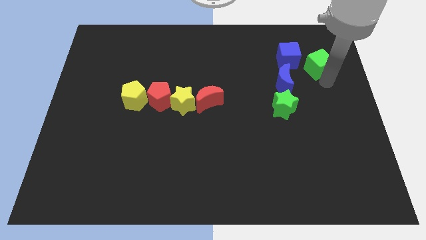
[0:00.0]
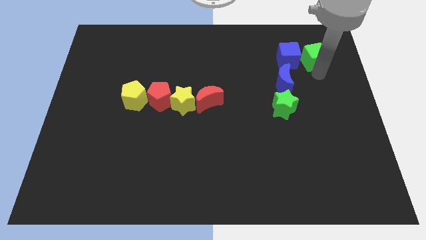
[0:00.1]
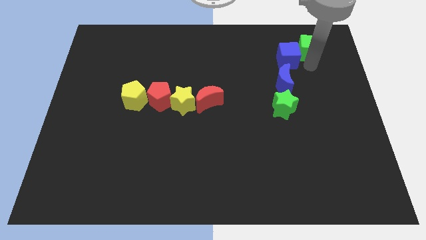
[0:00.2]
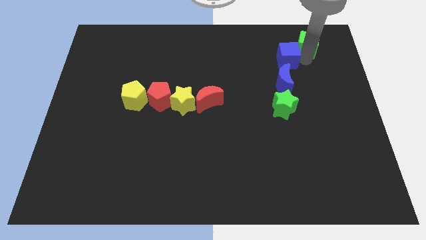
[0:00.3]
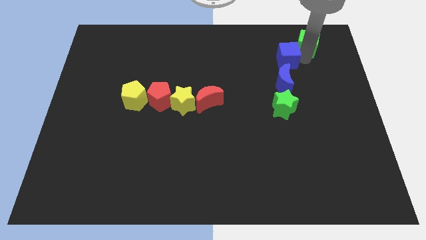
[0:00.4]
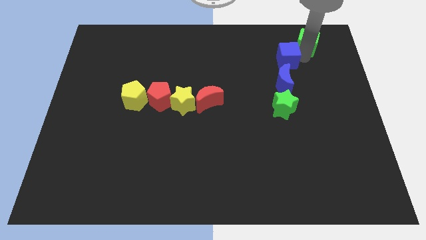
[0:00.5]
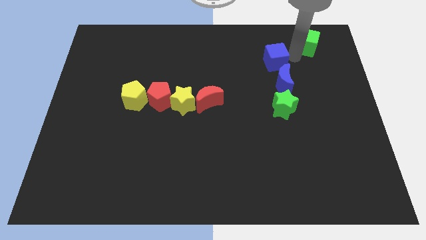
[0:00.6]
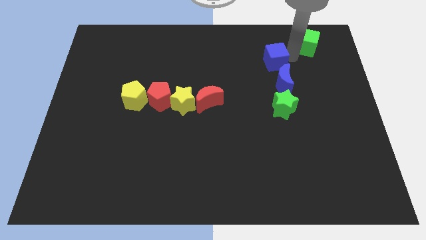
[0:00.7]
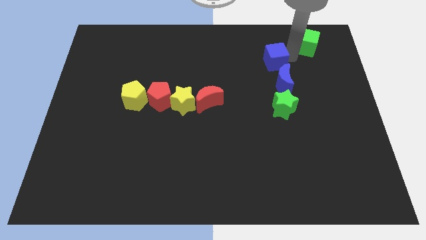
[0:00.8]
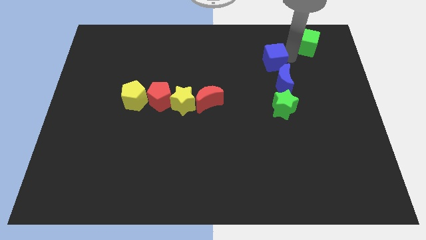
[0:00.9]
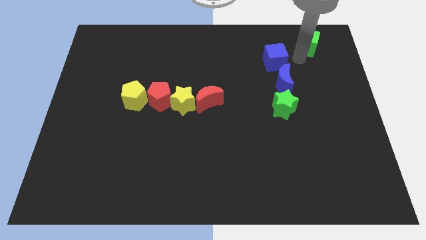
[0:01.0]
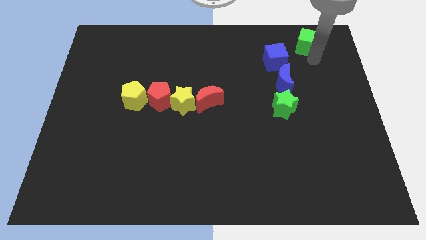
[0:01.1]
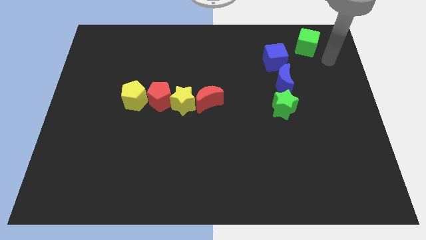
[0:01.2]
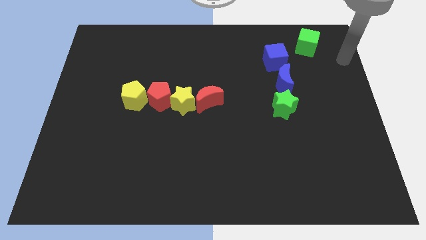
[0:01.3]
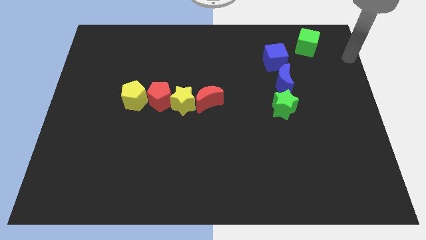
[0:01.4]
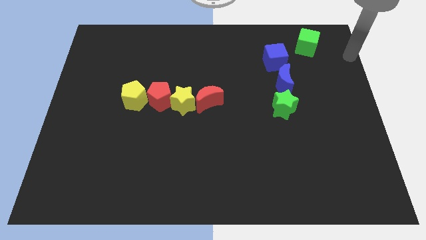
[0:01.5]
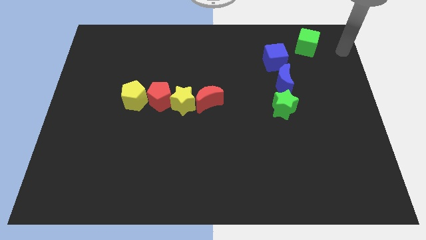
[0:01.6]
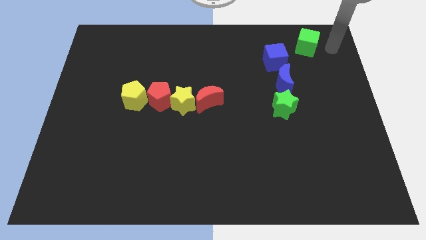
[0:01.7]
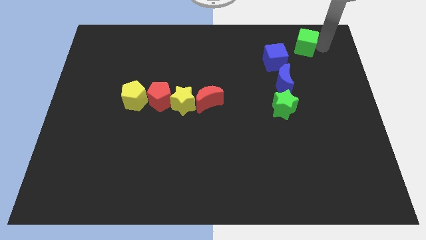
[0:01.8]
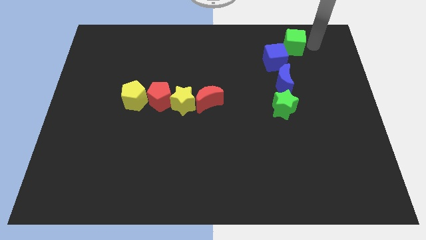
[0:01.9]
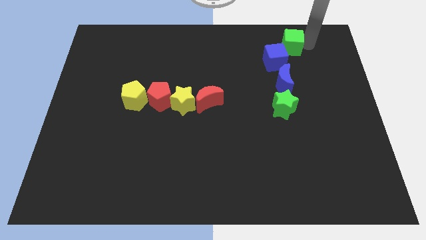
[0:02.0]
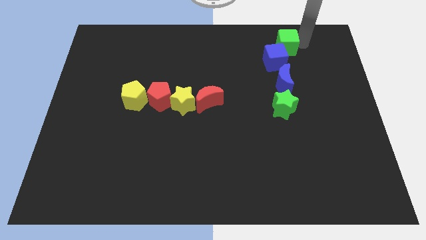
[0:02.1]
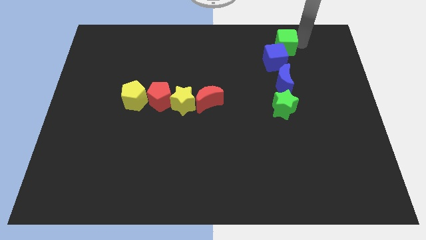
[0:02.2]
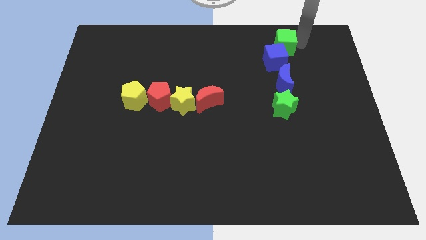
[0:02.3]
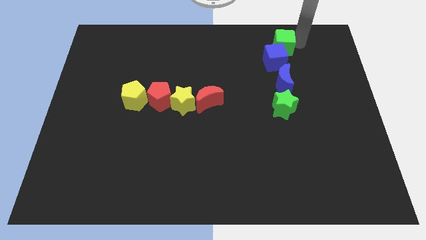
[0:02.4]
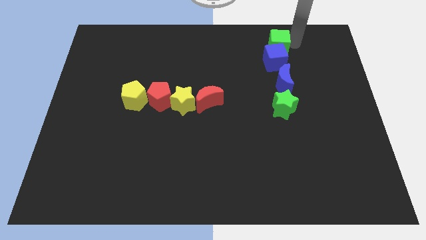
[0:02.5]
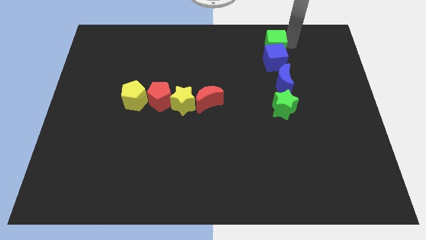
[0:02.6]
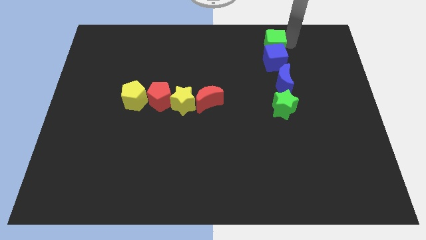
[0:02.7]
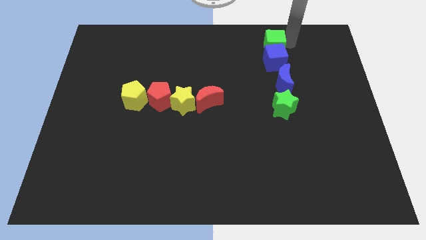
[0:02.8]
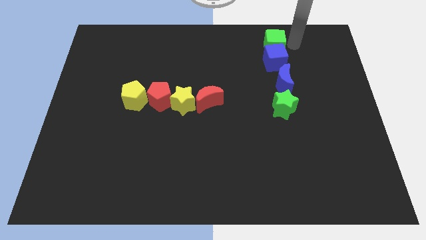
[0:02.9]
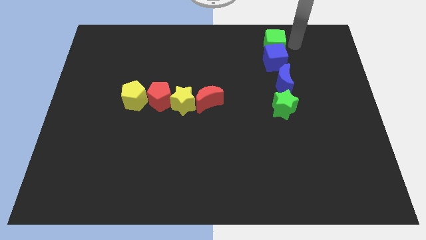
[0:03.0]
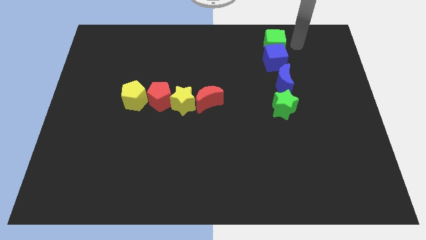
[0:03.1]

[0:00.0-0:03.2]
place the green cube on top of blue cube

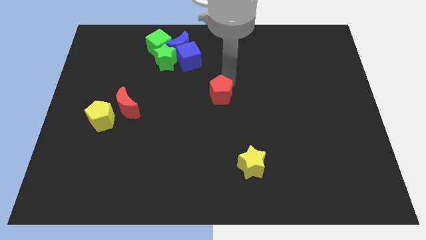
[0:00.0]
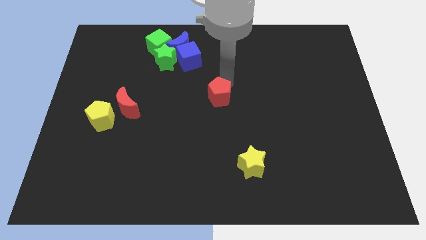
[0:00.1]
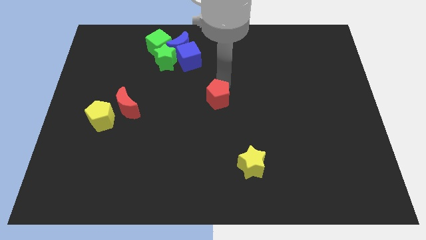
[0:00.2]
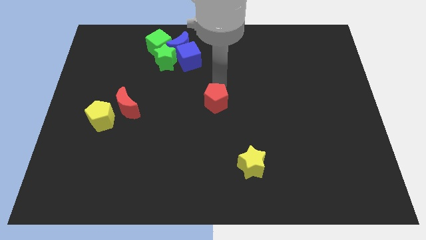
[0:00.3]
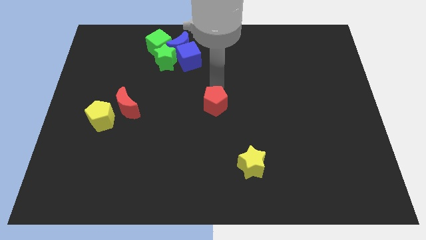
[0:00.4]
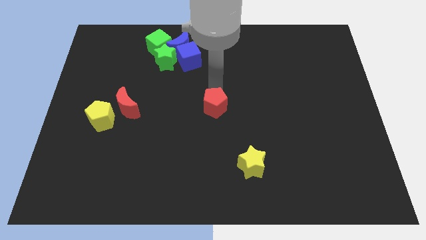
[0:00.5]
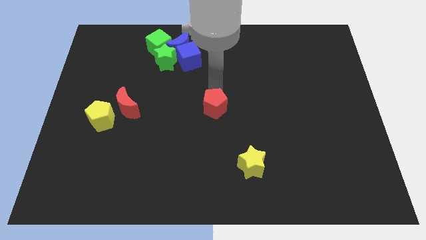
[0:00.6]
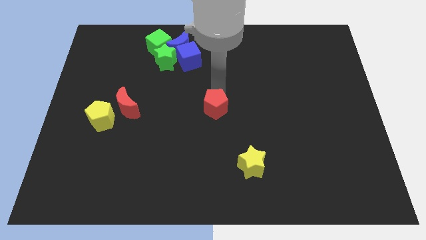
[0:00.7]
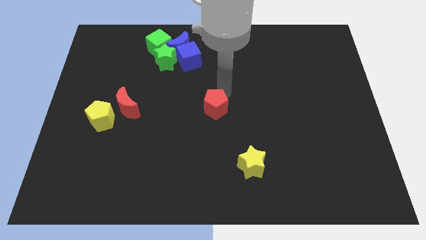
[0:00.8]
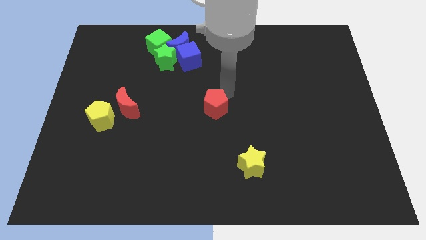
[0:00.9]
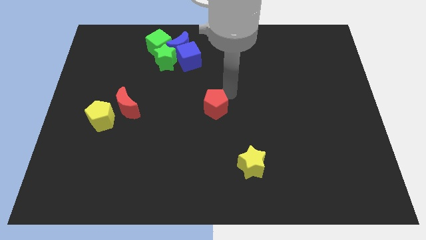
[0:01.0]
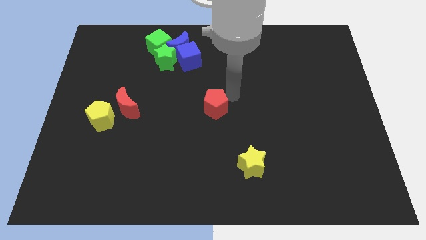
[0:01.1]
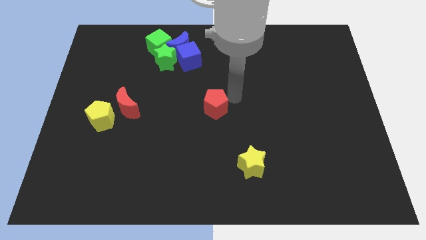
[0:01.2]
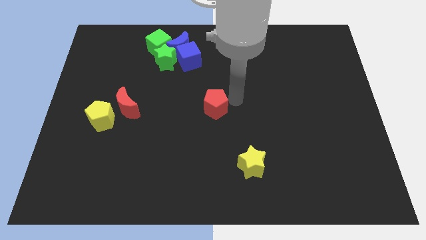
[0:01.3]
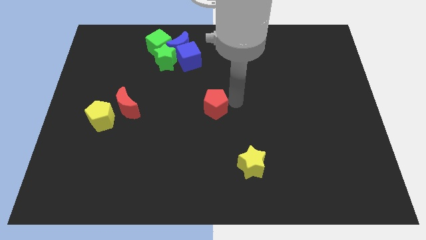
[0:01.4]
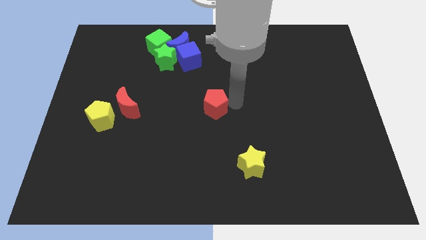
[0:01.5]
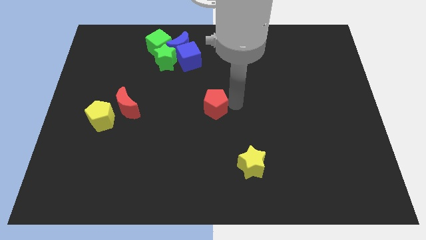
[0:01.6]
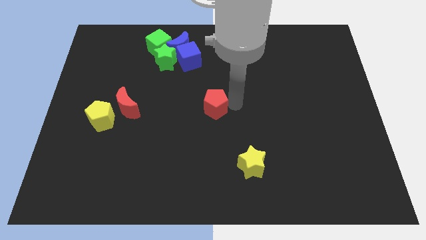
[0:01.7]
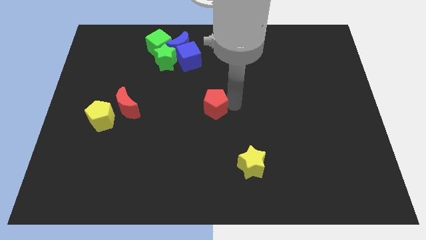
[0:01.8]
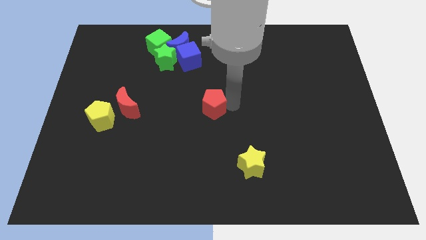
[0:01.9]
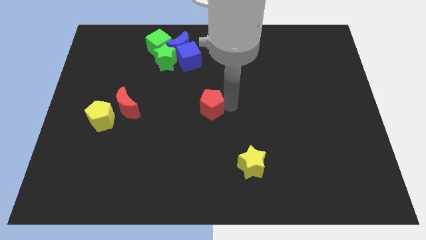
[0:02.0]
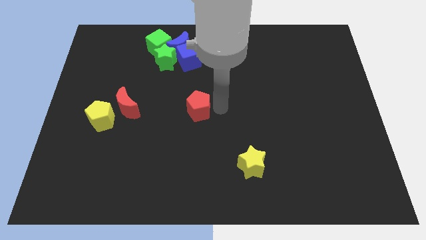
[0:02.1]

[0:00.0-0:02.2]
move the red pentagon to the center of the board

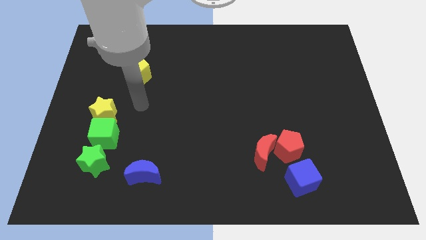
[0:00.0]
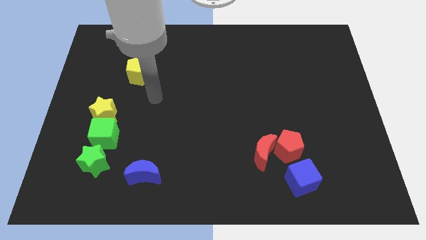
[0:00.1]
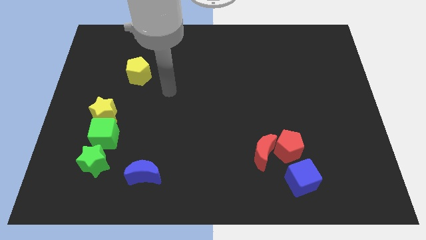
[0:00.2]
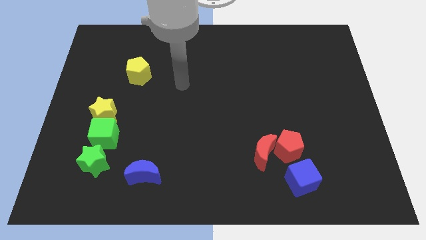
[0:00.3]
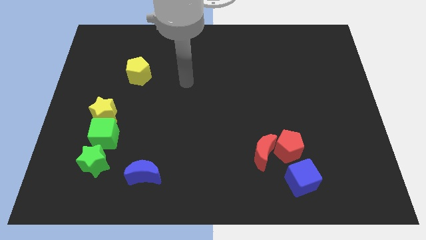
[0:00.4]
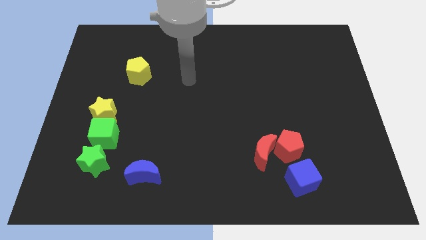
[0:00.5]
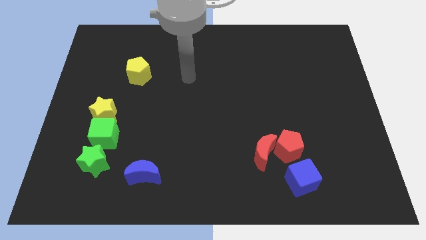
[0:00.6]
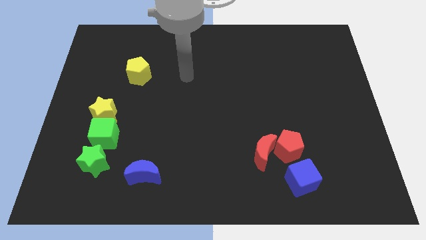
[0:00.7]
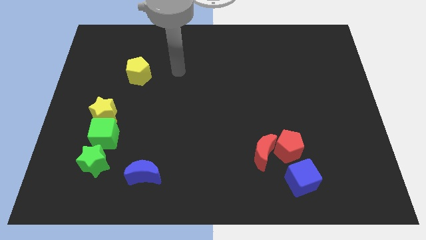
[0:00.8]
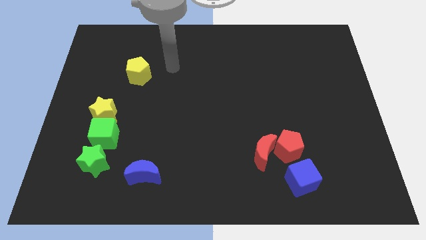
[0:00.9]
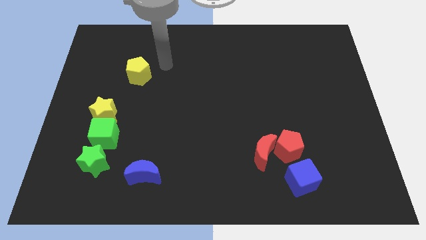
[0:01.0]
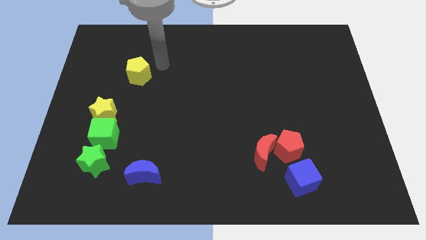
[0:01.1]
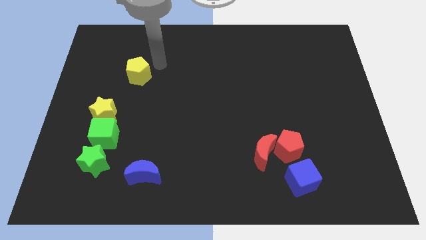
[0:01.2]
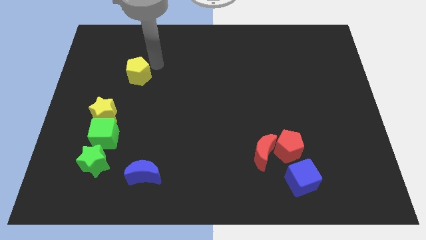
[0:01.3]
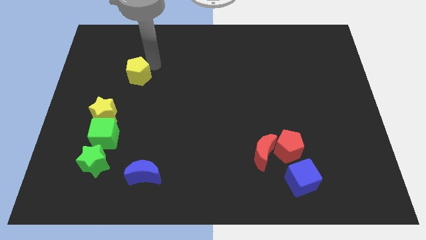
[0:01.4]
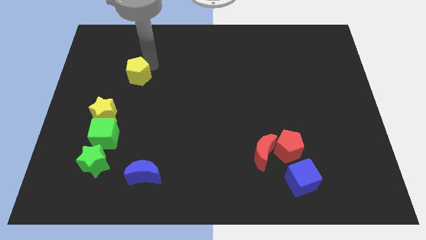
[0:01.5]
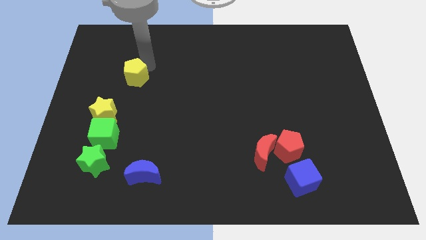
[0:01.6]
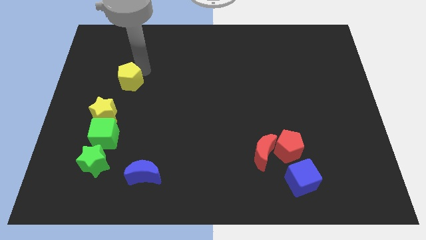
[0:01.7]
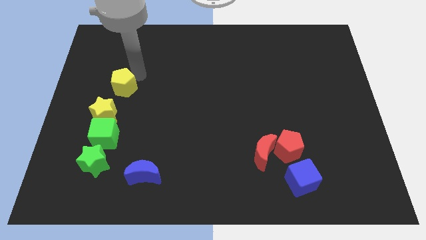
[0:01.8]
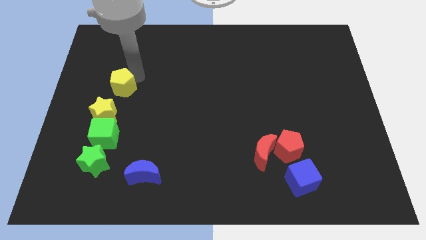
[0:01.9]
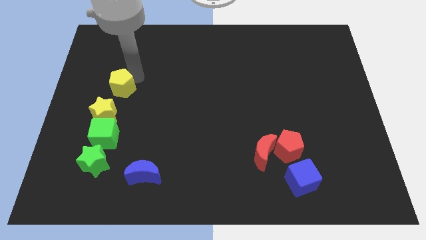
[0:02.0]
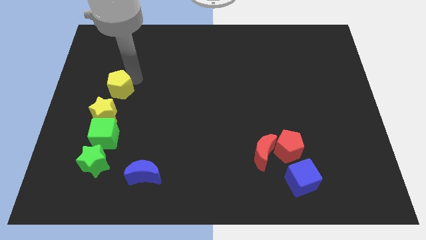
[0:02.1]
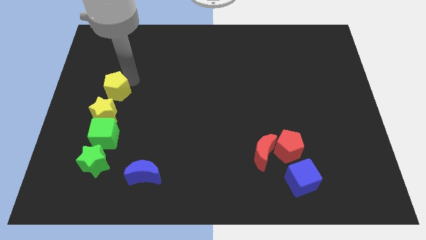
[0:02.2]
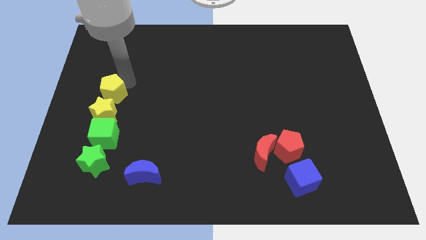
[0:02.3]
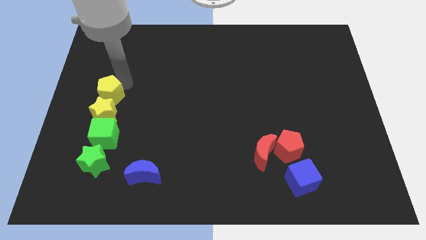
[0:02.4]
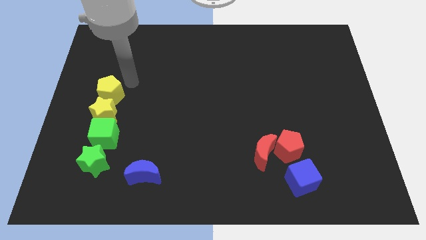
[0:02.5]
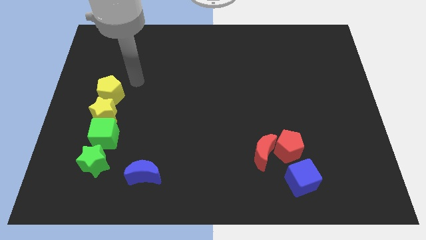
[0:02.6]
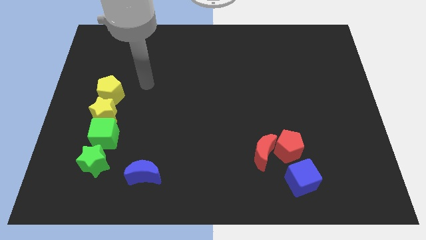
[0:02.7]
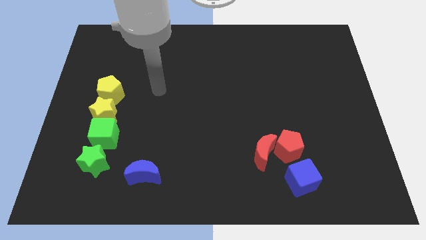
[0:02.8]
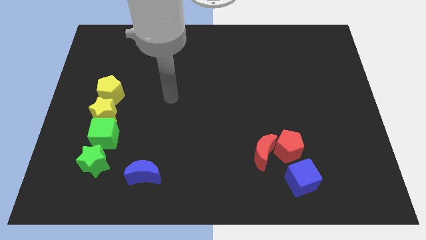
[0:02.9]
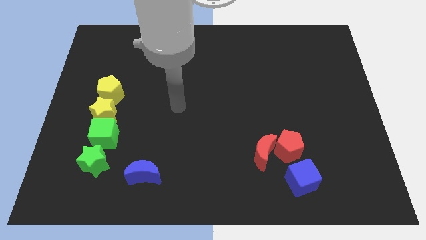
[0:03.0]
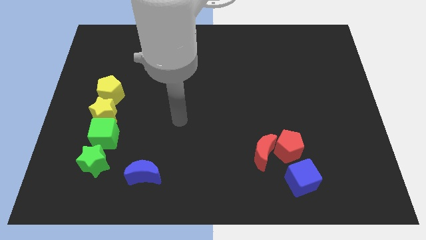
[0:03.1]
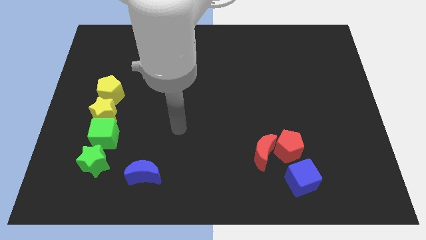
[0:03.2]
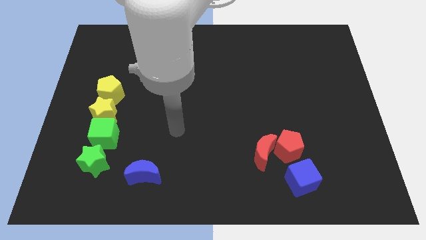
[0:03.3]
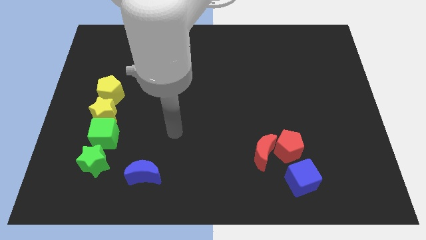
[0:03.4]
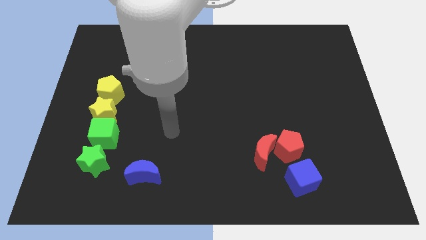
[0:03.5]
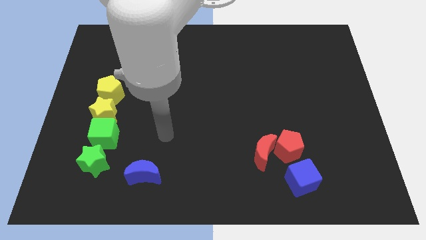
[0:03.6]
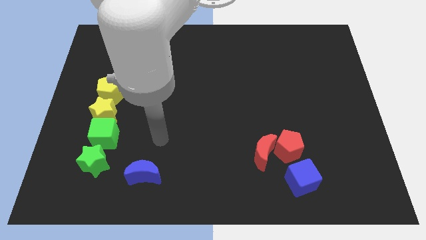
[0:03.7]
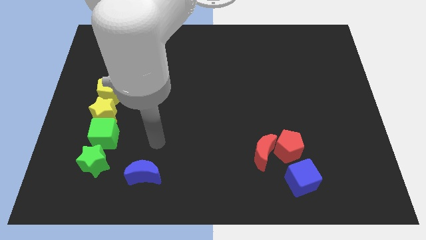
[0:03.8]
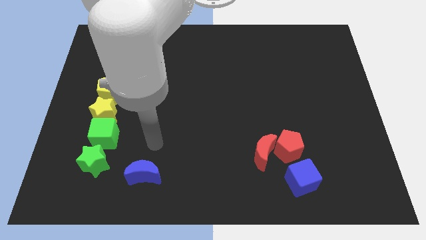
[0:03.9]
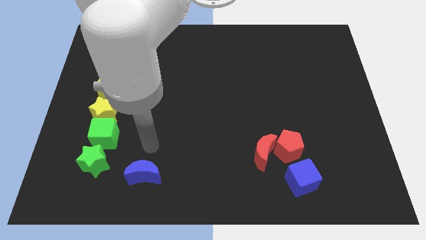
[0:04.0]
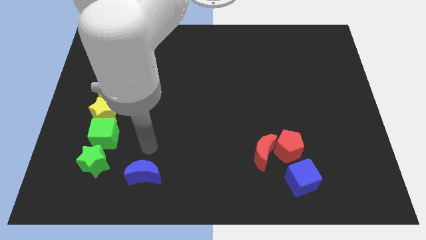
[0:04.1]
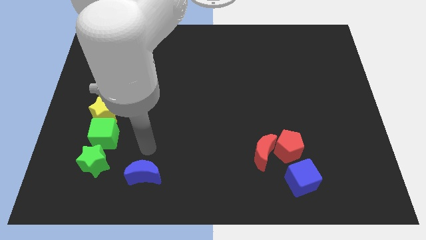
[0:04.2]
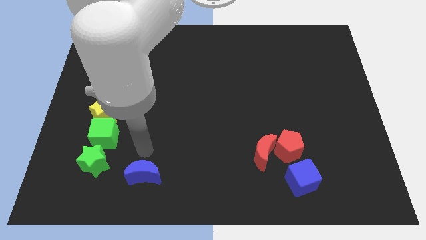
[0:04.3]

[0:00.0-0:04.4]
push the yellow pentagon into the yellow star
